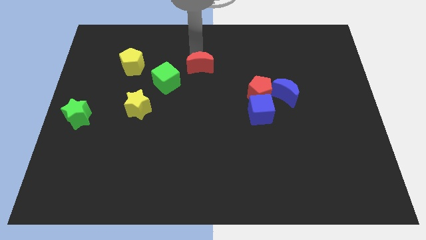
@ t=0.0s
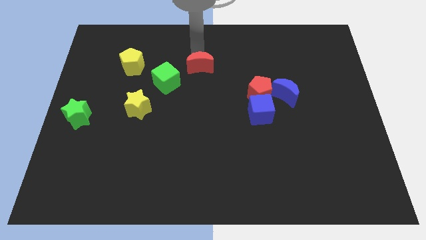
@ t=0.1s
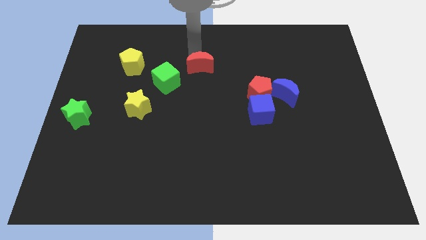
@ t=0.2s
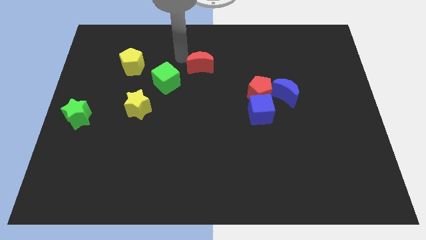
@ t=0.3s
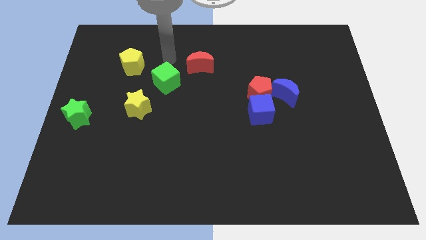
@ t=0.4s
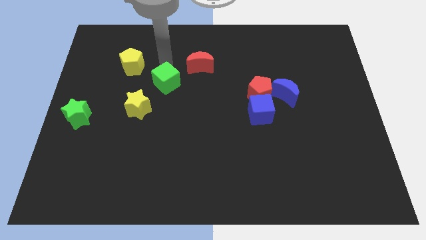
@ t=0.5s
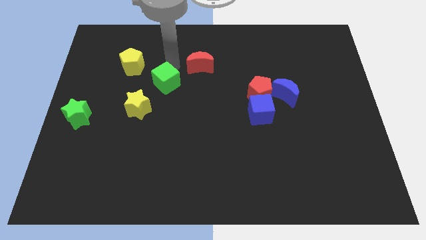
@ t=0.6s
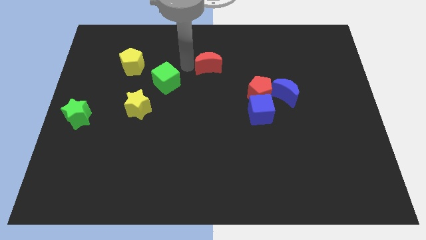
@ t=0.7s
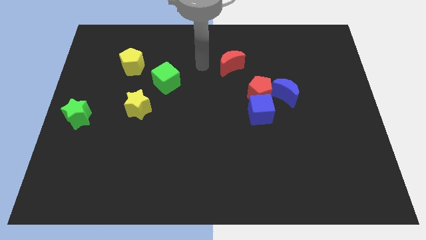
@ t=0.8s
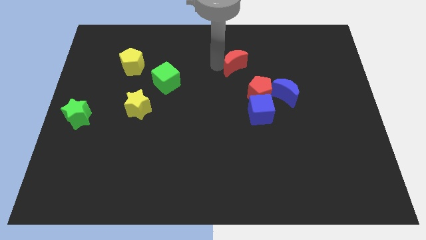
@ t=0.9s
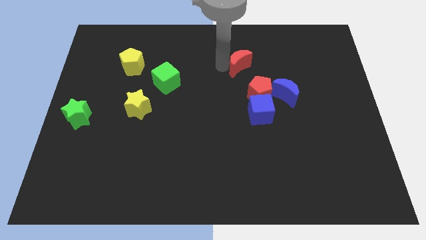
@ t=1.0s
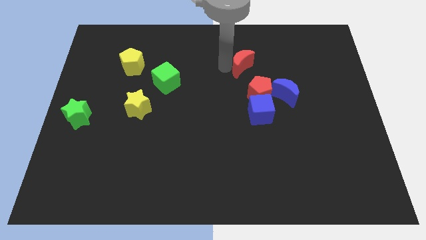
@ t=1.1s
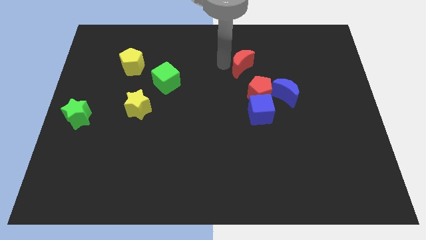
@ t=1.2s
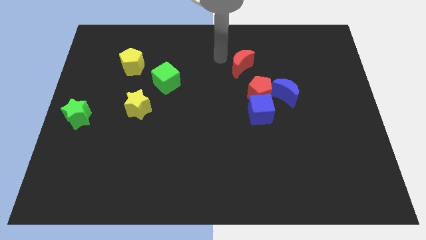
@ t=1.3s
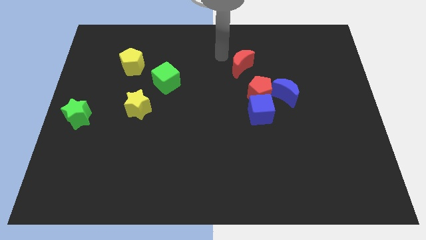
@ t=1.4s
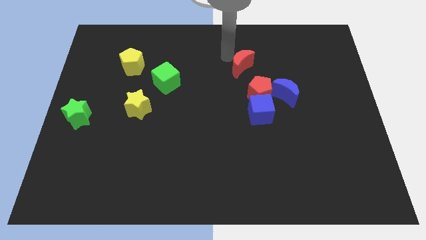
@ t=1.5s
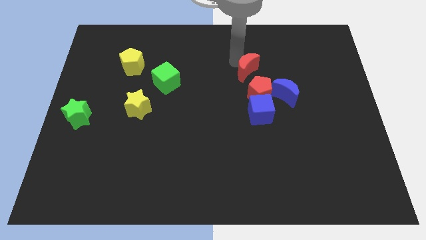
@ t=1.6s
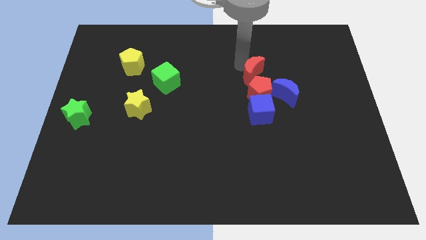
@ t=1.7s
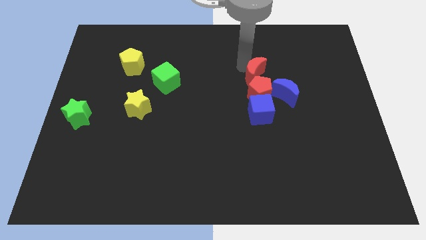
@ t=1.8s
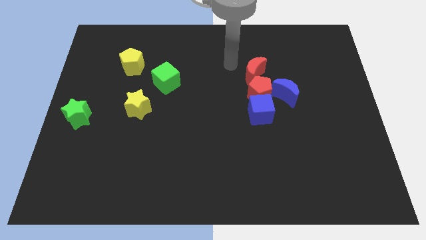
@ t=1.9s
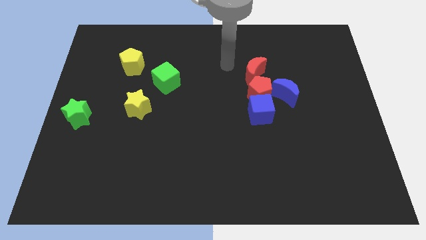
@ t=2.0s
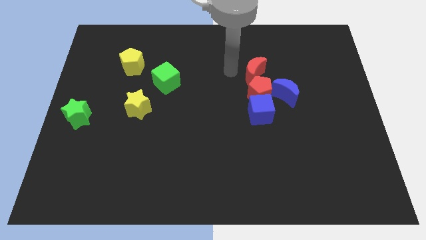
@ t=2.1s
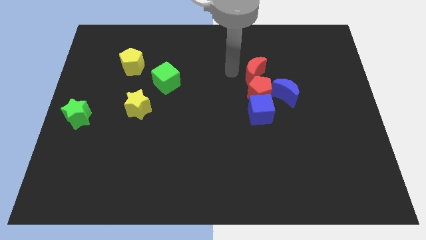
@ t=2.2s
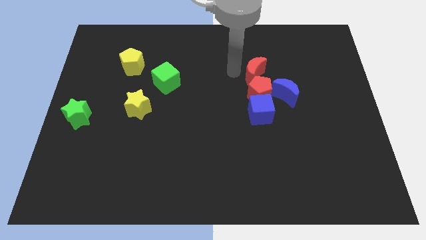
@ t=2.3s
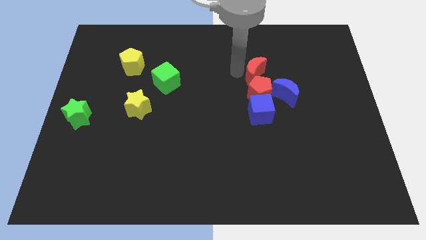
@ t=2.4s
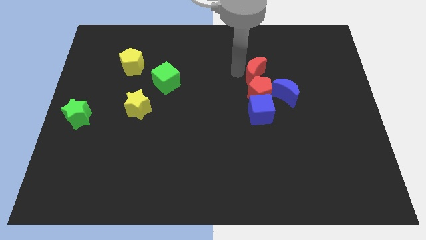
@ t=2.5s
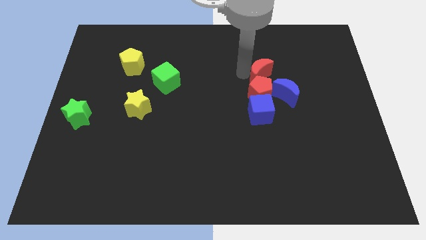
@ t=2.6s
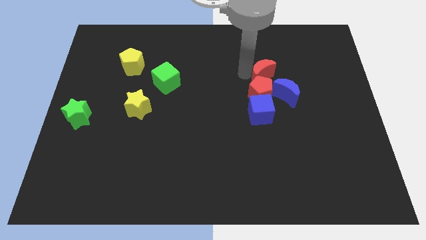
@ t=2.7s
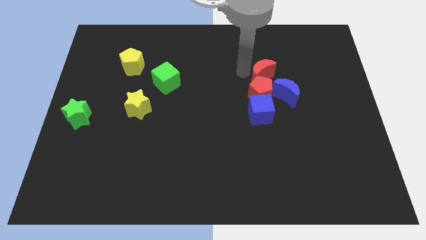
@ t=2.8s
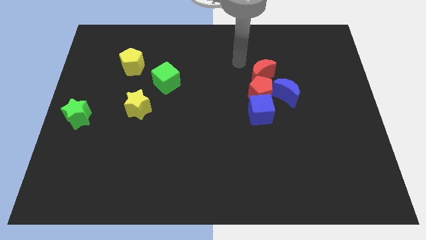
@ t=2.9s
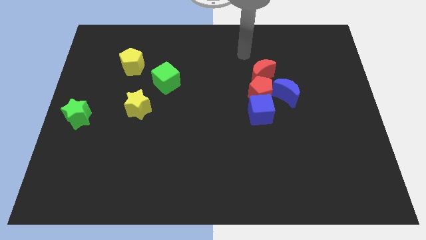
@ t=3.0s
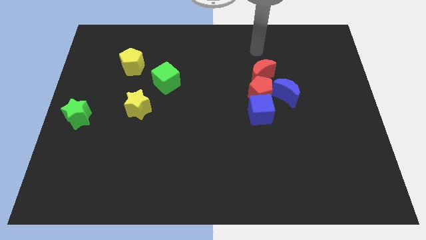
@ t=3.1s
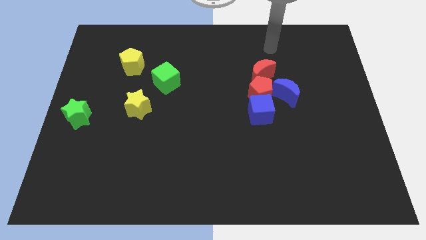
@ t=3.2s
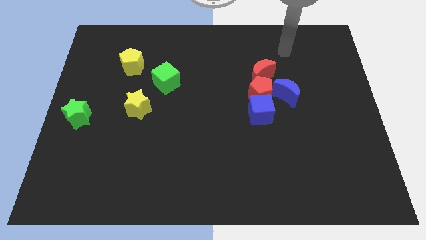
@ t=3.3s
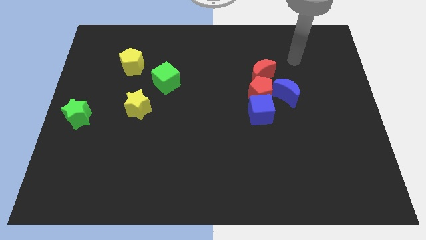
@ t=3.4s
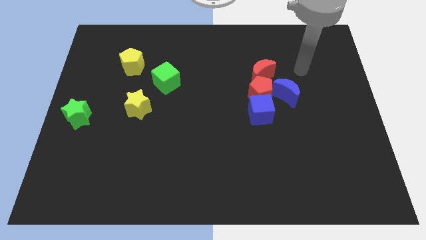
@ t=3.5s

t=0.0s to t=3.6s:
place the red crescent at the top of the red pentagon

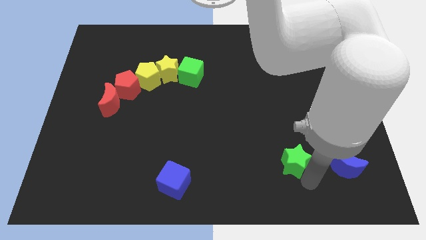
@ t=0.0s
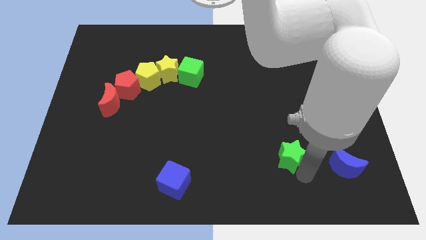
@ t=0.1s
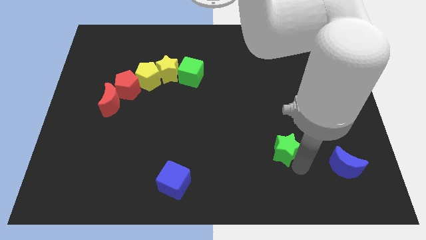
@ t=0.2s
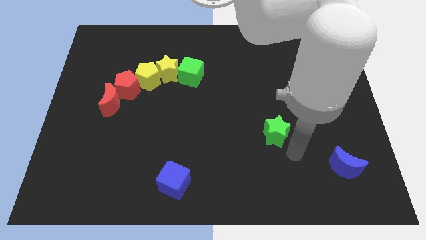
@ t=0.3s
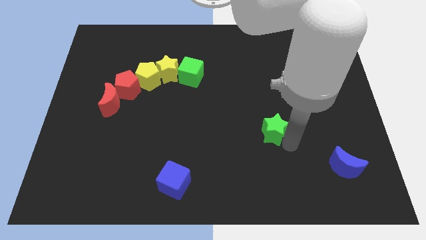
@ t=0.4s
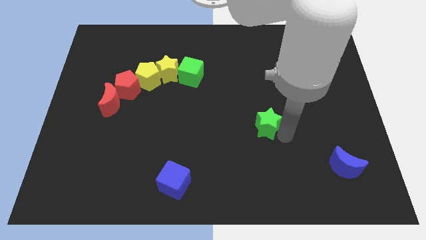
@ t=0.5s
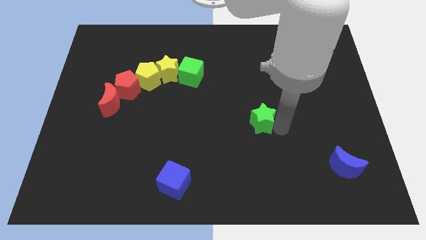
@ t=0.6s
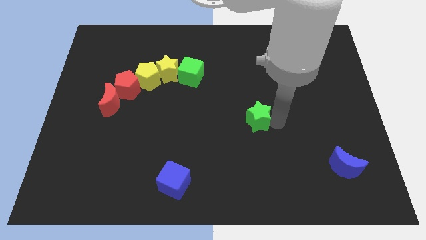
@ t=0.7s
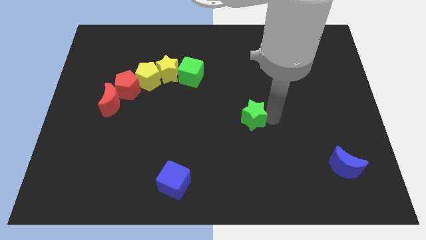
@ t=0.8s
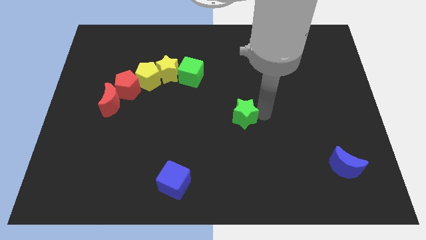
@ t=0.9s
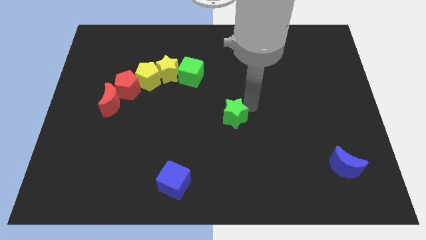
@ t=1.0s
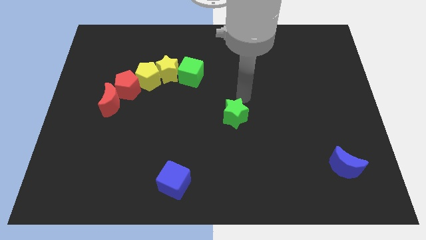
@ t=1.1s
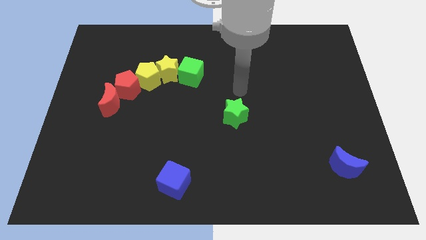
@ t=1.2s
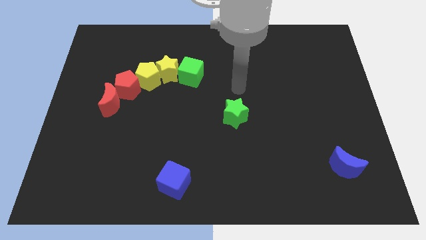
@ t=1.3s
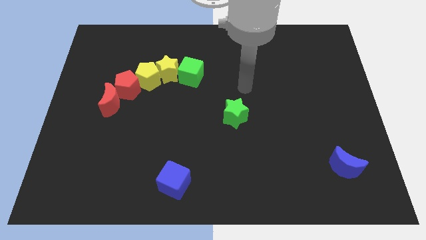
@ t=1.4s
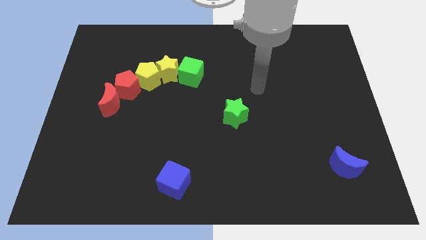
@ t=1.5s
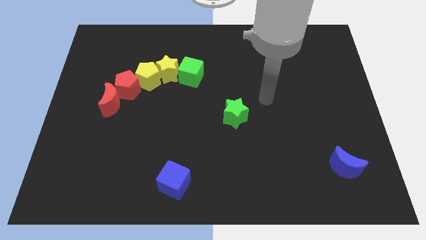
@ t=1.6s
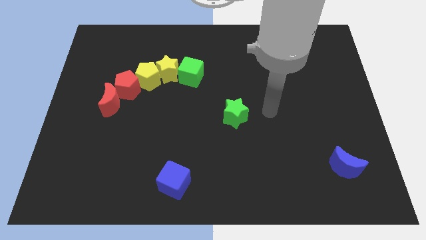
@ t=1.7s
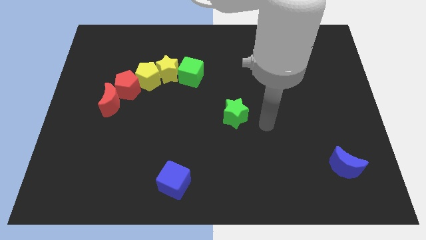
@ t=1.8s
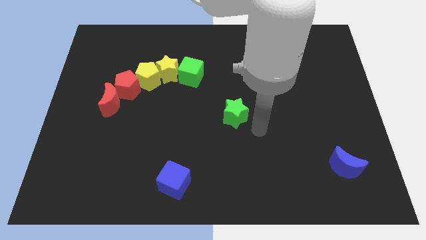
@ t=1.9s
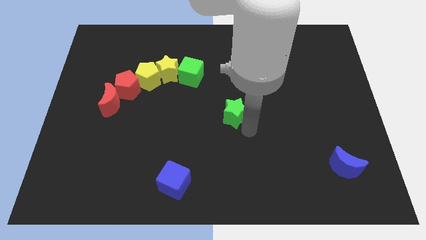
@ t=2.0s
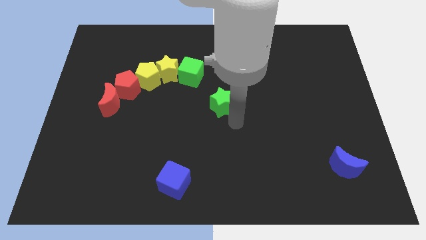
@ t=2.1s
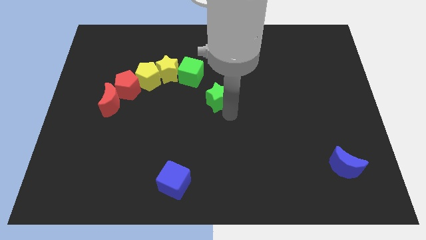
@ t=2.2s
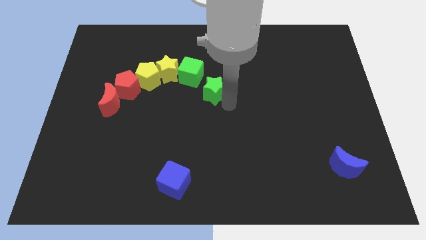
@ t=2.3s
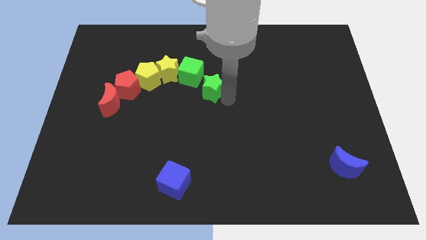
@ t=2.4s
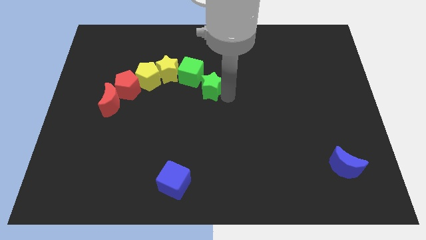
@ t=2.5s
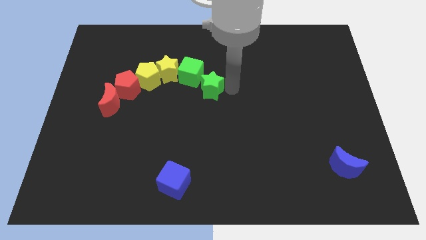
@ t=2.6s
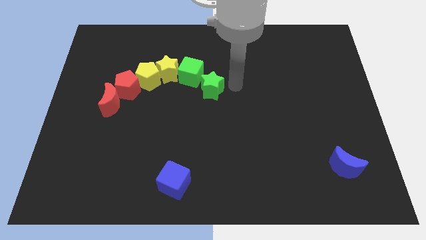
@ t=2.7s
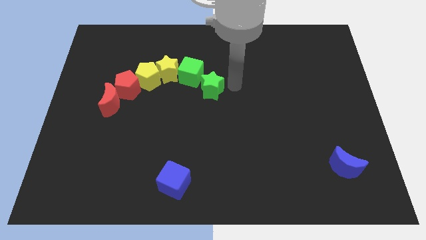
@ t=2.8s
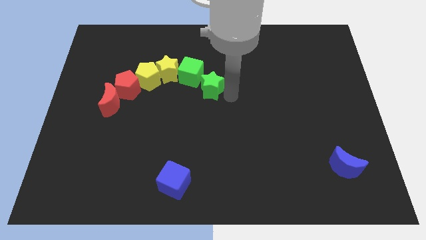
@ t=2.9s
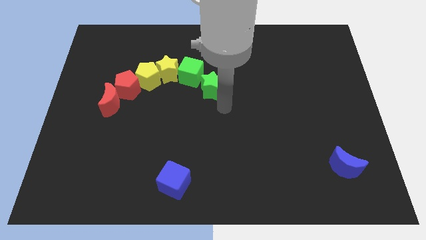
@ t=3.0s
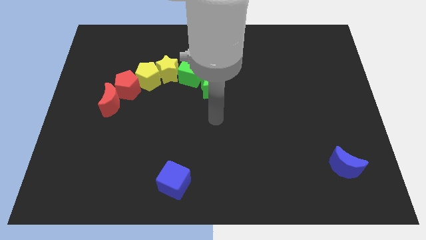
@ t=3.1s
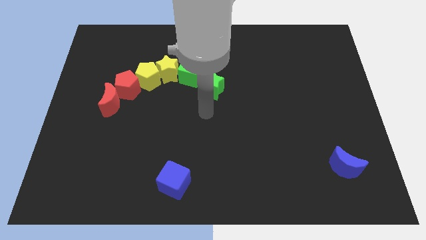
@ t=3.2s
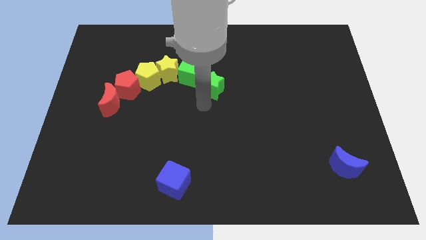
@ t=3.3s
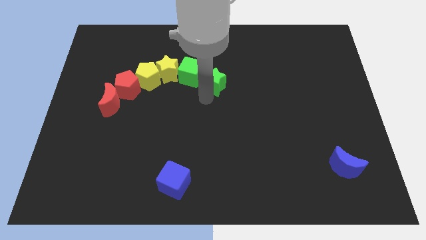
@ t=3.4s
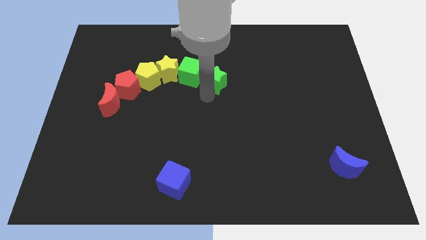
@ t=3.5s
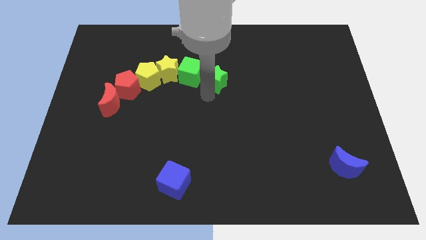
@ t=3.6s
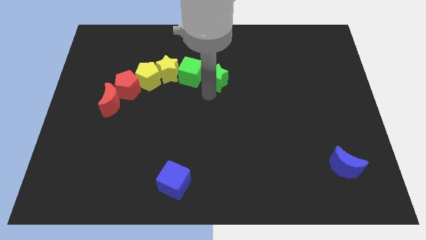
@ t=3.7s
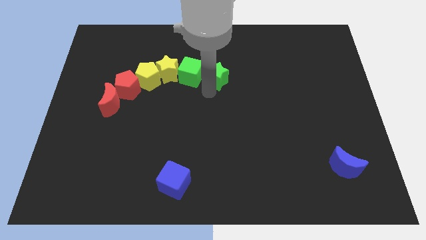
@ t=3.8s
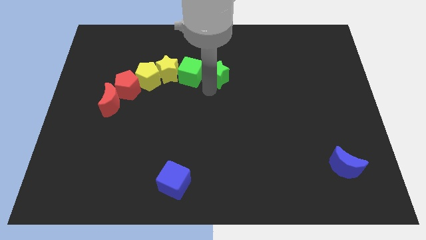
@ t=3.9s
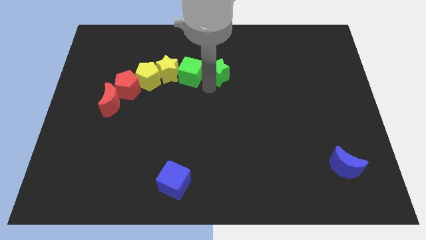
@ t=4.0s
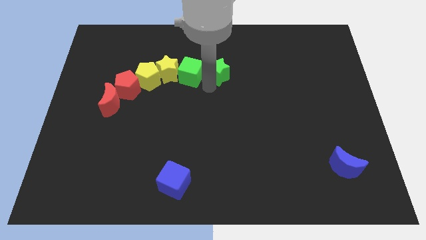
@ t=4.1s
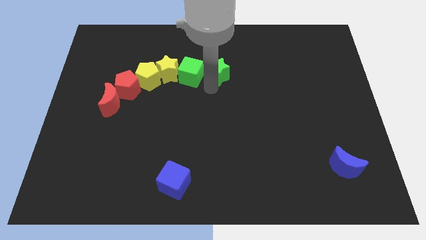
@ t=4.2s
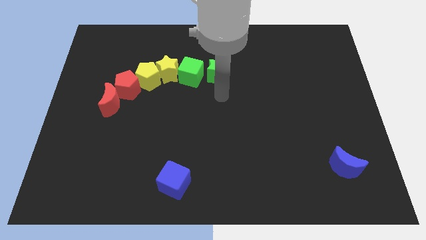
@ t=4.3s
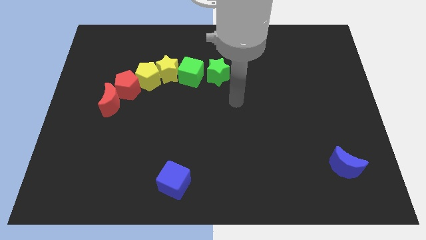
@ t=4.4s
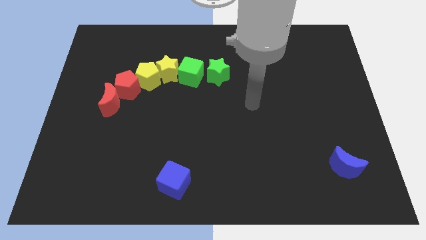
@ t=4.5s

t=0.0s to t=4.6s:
place the green star to the right of the green cube

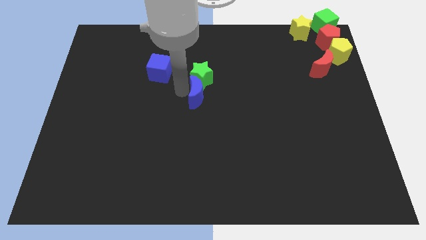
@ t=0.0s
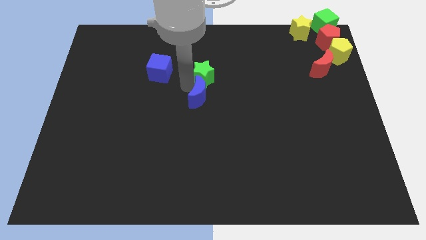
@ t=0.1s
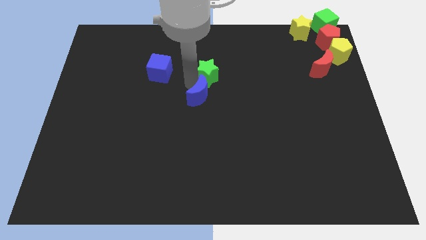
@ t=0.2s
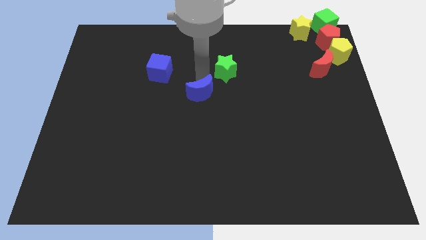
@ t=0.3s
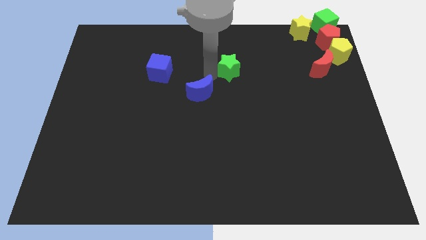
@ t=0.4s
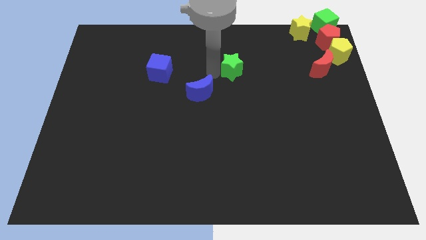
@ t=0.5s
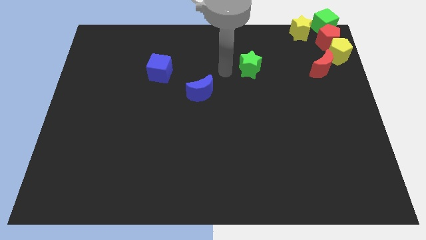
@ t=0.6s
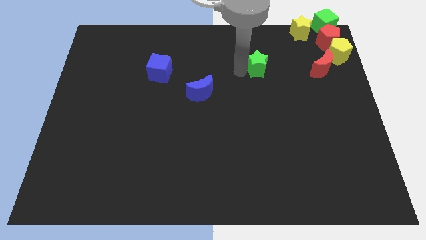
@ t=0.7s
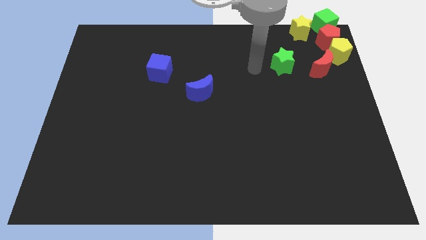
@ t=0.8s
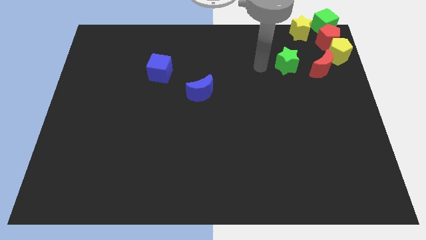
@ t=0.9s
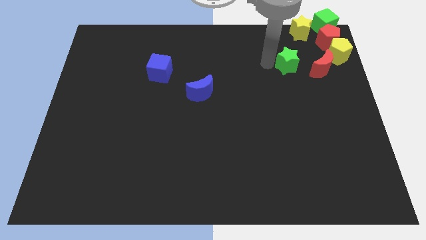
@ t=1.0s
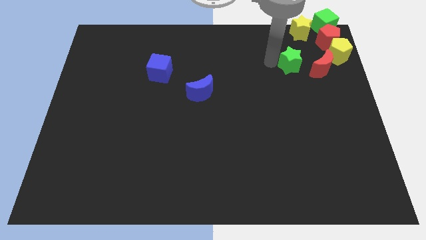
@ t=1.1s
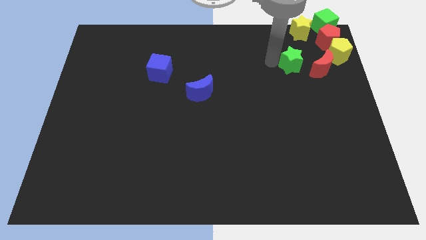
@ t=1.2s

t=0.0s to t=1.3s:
separate green star from the blue moon
